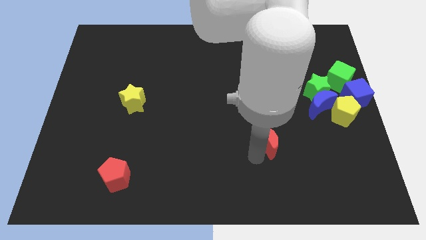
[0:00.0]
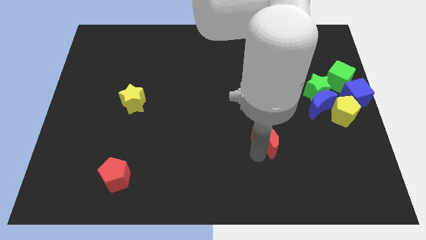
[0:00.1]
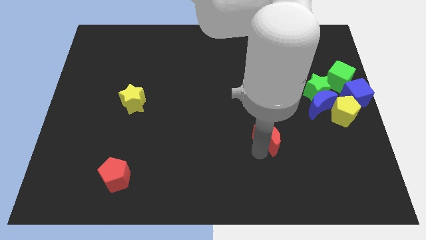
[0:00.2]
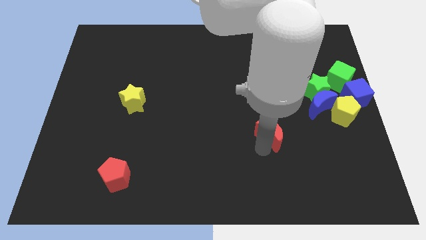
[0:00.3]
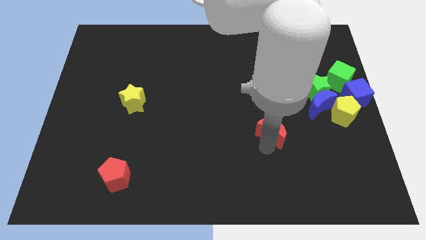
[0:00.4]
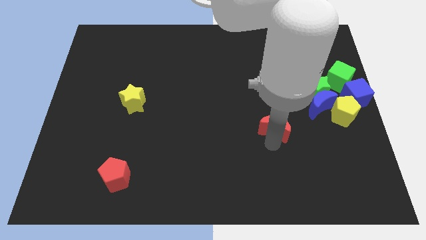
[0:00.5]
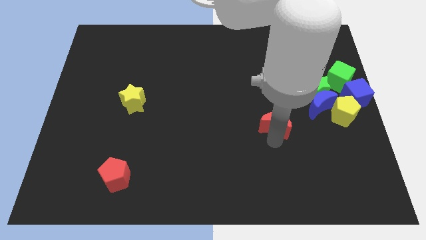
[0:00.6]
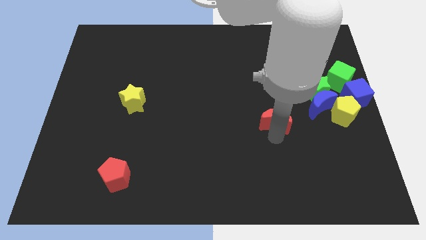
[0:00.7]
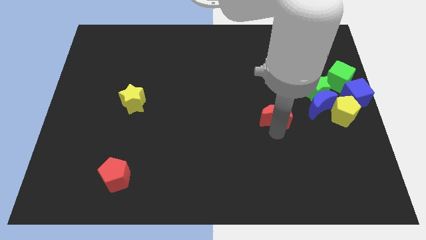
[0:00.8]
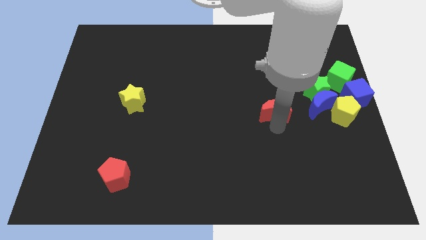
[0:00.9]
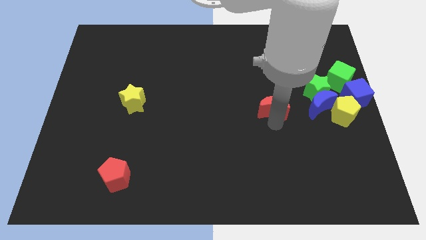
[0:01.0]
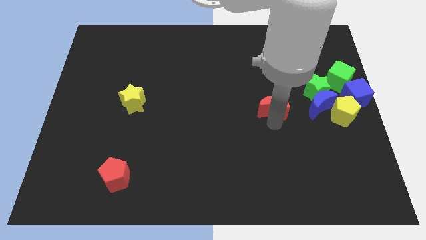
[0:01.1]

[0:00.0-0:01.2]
push the red crescent to the left of the blue crescent

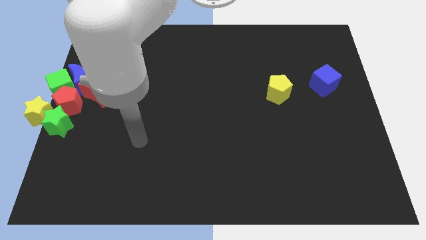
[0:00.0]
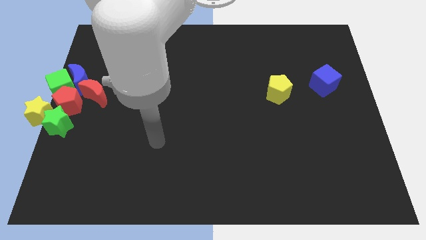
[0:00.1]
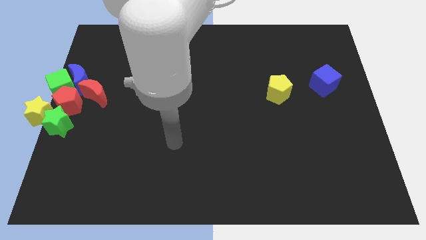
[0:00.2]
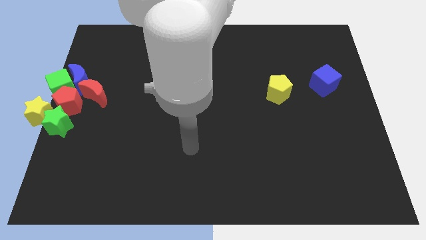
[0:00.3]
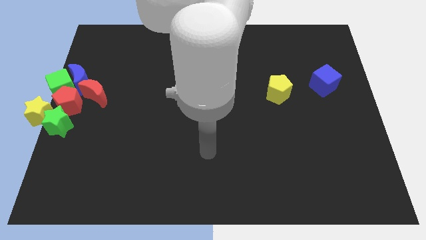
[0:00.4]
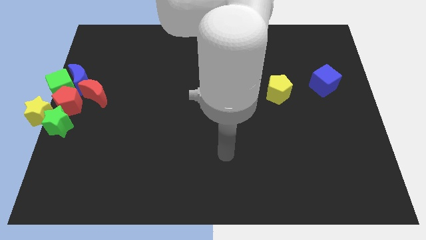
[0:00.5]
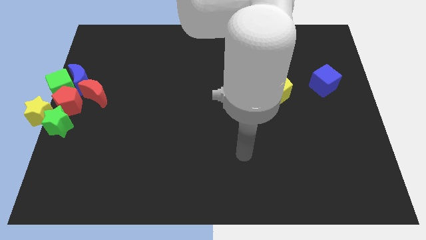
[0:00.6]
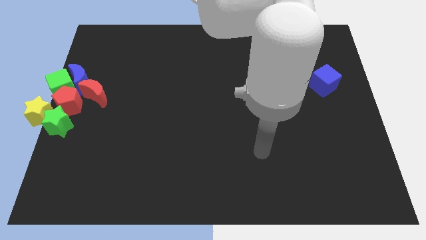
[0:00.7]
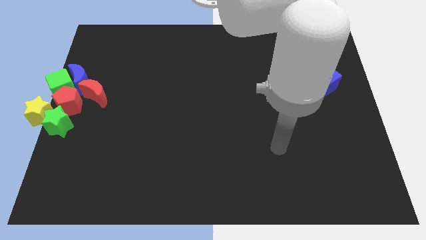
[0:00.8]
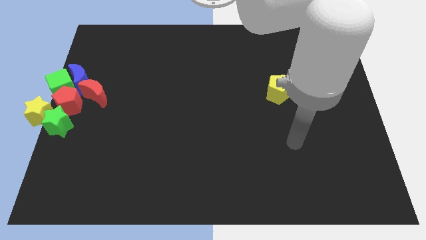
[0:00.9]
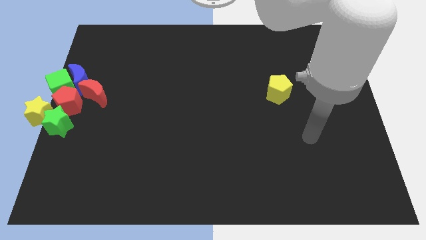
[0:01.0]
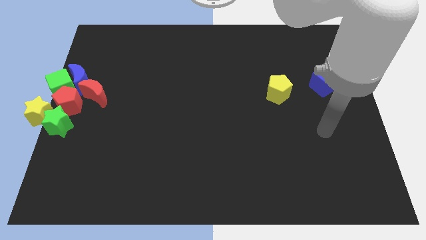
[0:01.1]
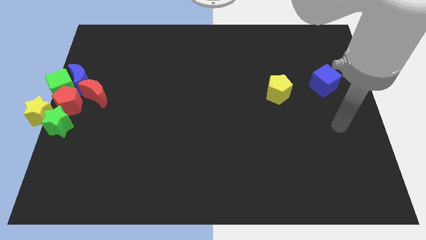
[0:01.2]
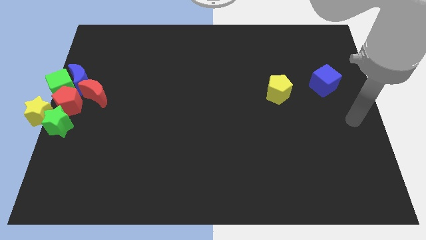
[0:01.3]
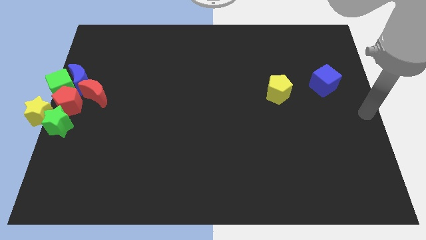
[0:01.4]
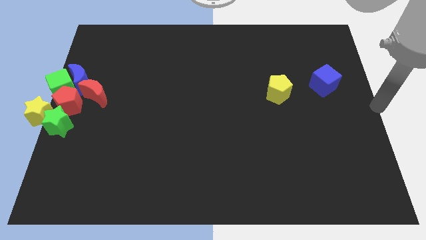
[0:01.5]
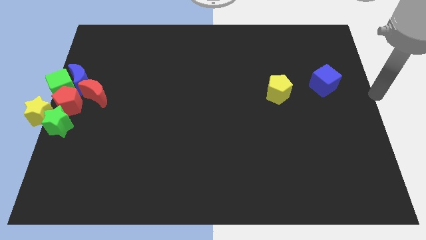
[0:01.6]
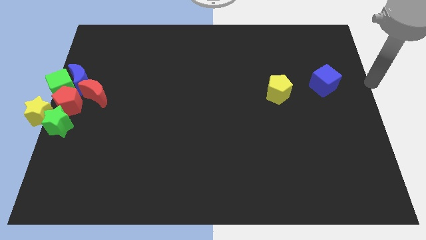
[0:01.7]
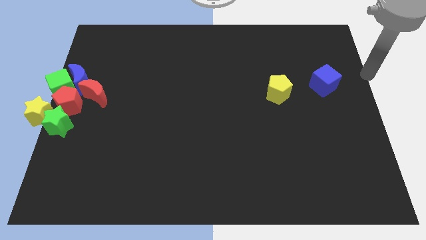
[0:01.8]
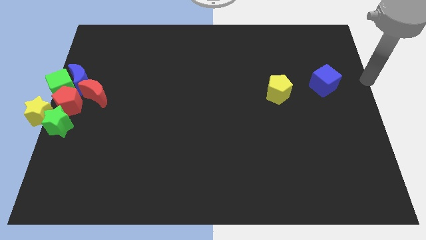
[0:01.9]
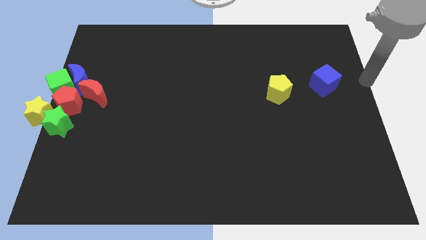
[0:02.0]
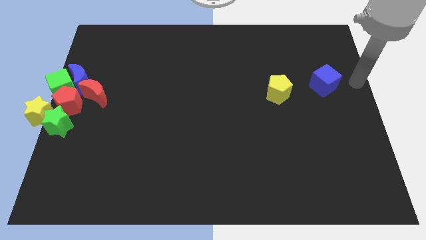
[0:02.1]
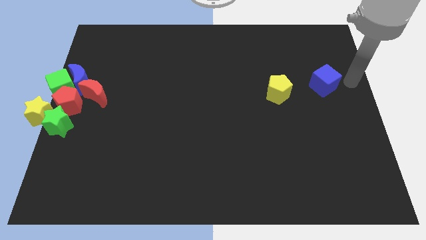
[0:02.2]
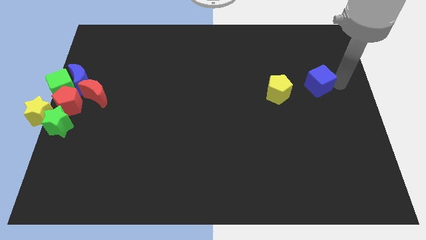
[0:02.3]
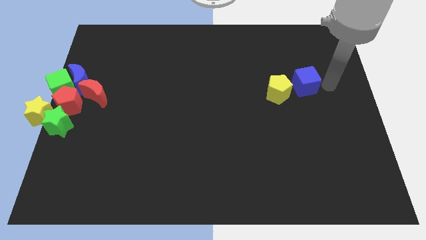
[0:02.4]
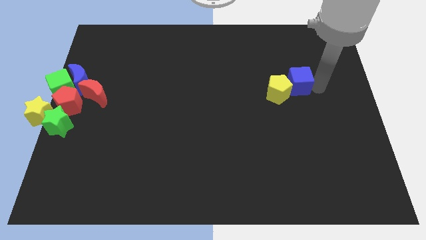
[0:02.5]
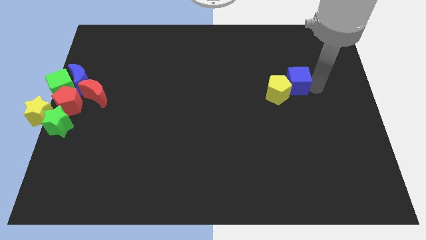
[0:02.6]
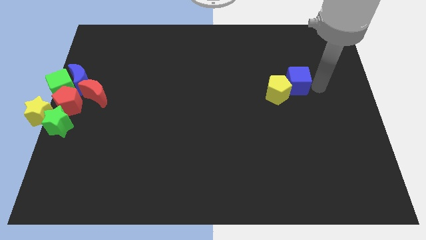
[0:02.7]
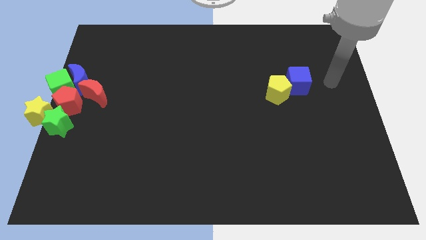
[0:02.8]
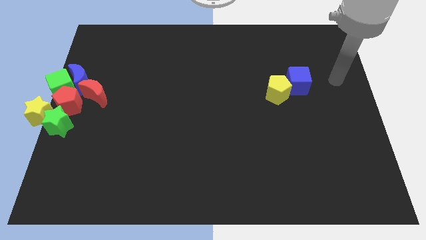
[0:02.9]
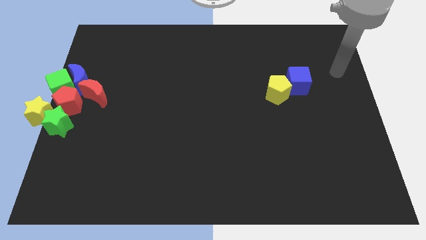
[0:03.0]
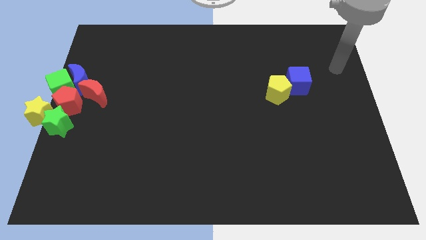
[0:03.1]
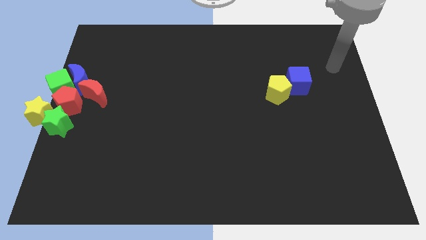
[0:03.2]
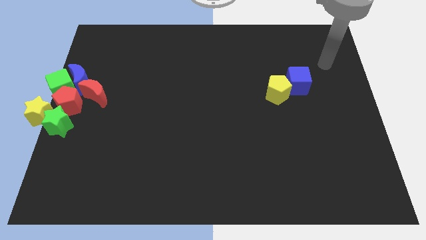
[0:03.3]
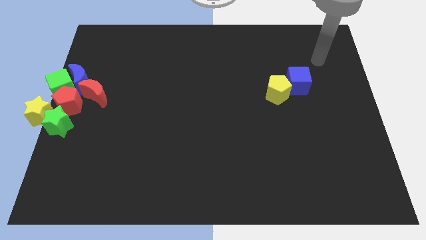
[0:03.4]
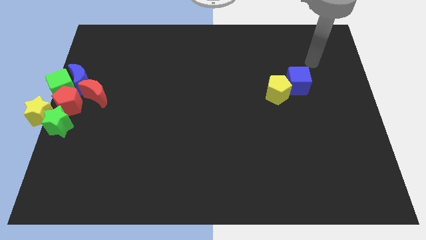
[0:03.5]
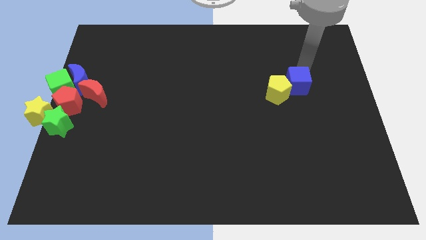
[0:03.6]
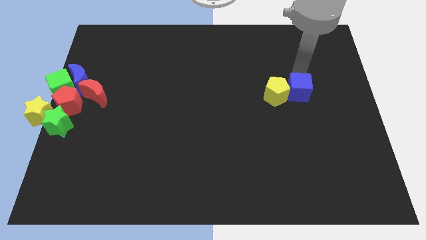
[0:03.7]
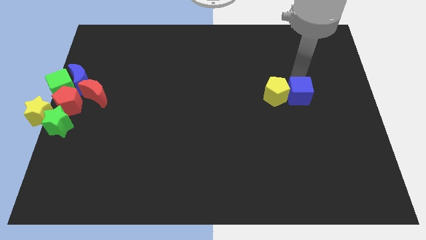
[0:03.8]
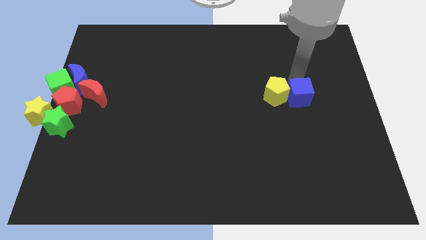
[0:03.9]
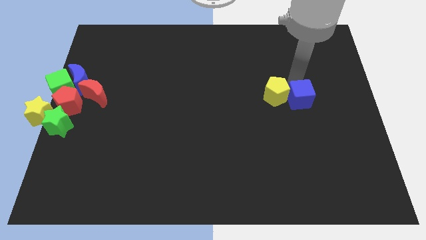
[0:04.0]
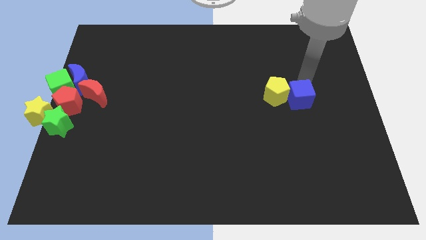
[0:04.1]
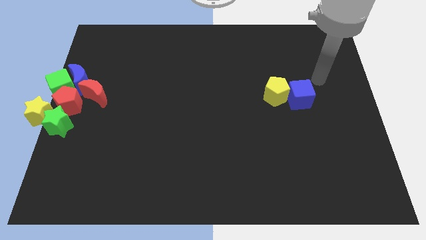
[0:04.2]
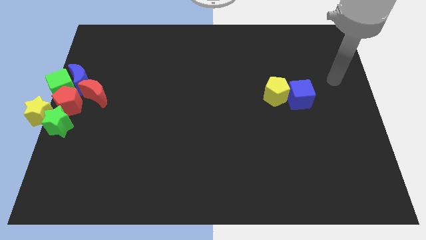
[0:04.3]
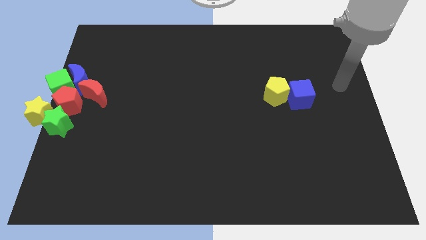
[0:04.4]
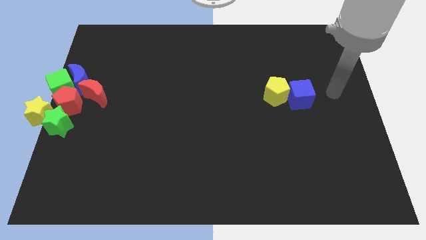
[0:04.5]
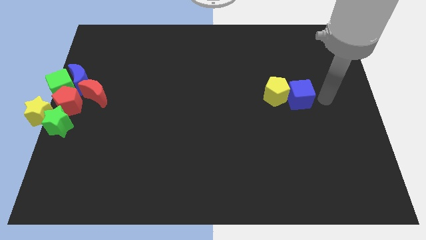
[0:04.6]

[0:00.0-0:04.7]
move the yellow pentagon and blue cube slightly down

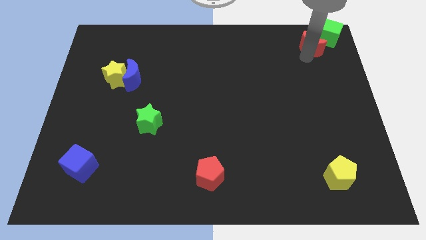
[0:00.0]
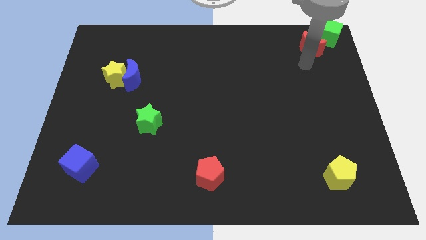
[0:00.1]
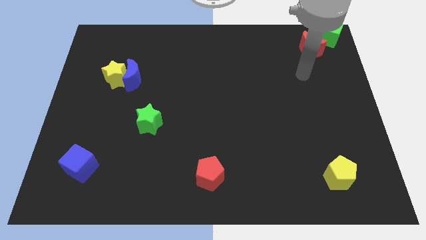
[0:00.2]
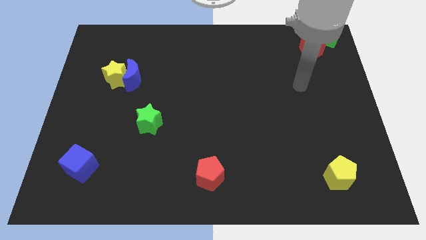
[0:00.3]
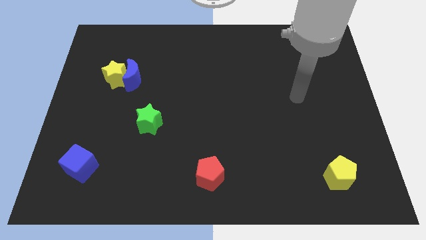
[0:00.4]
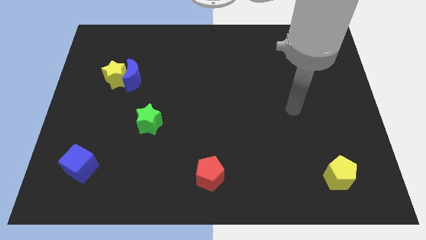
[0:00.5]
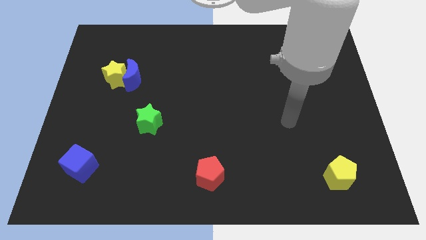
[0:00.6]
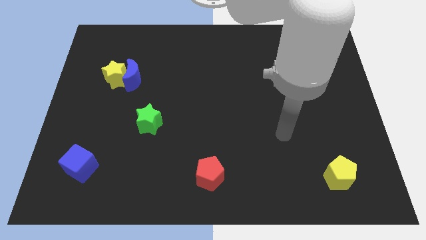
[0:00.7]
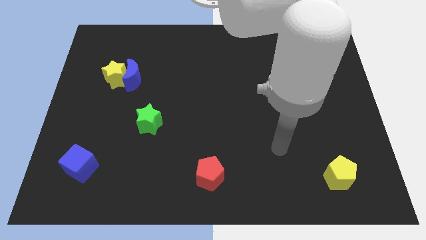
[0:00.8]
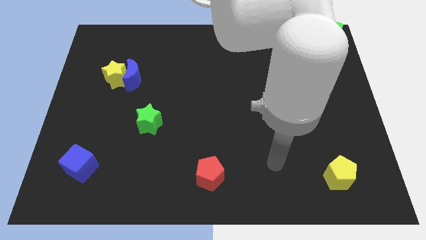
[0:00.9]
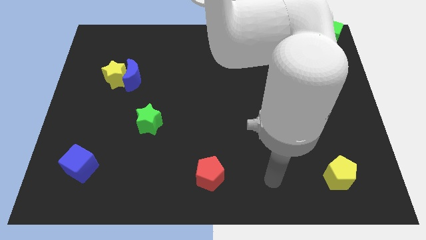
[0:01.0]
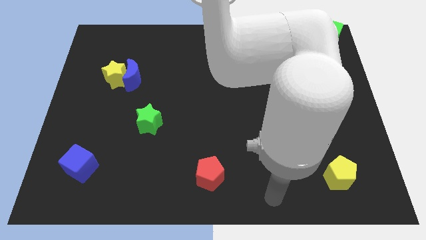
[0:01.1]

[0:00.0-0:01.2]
place your arm in between the red and the yellow pentagon

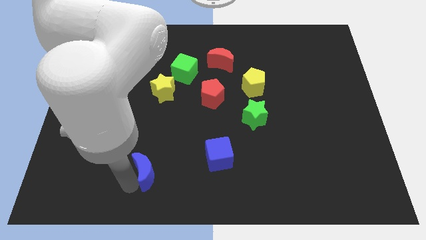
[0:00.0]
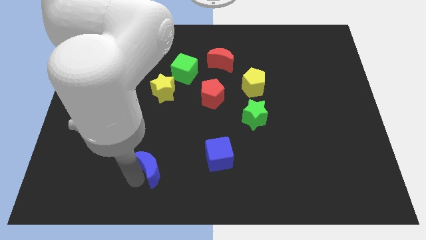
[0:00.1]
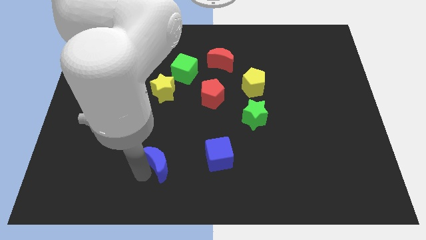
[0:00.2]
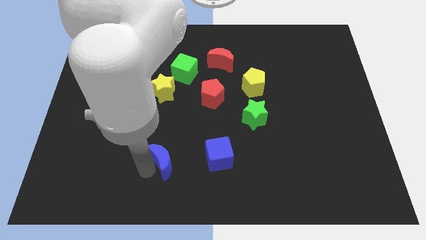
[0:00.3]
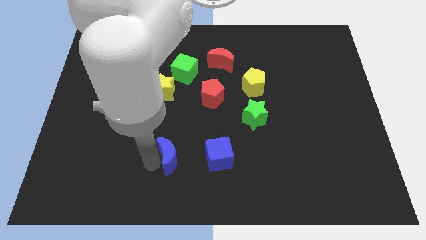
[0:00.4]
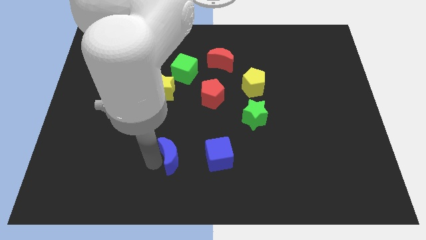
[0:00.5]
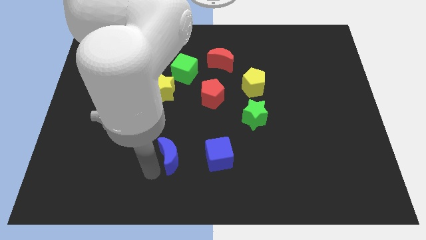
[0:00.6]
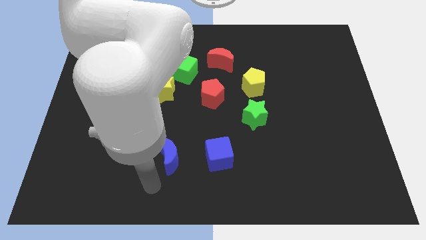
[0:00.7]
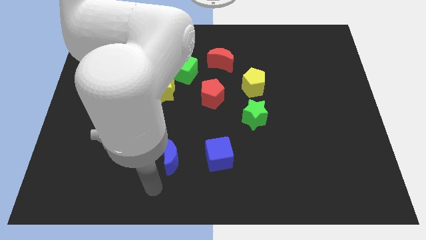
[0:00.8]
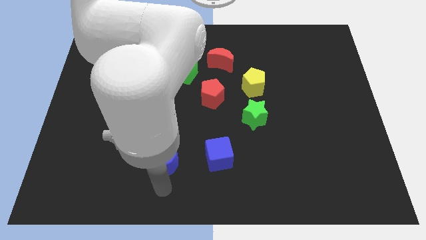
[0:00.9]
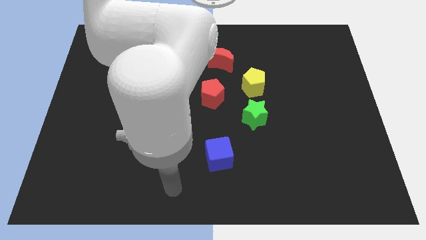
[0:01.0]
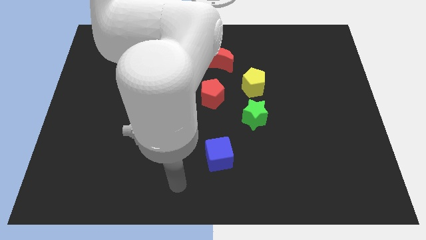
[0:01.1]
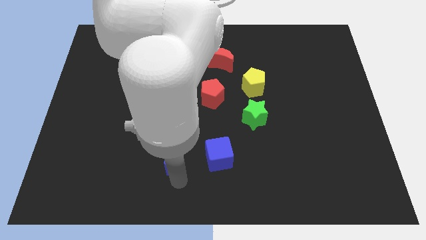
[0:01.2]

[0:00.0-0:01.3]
move the blue crescent to the left of the blue cube

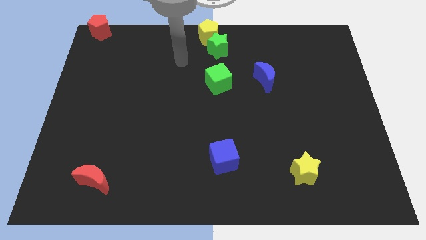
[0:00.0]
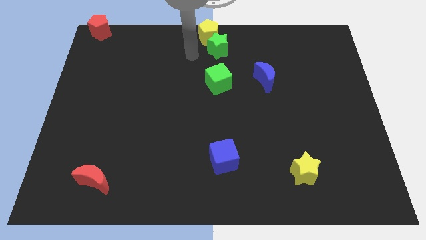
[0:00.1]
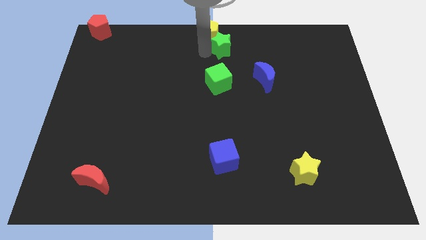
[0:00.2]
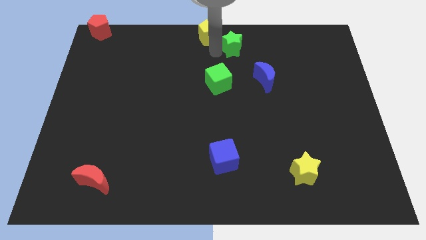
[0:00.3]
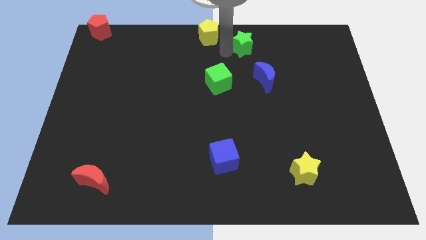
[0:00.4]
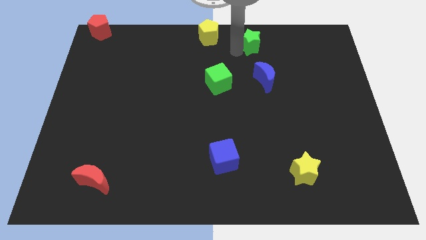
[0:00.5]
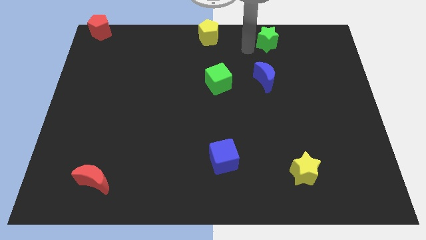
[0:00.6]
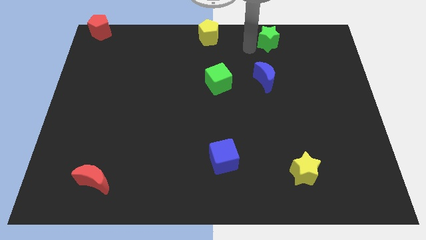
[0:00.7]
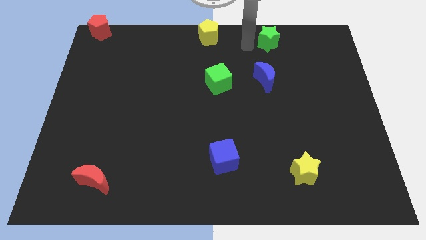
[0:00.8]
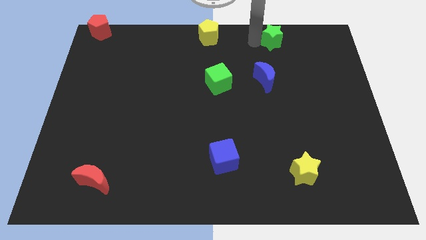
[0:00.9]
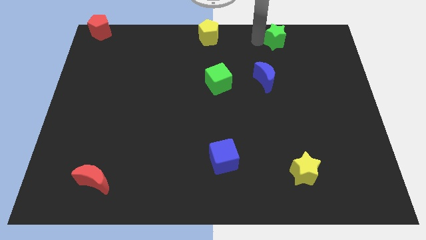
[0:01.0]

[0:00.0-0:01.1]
push the green star towards the top side of the board
